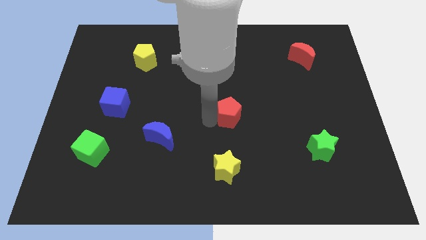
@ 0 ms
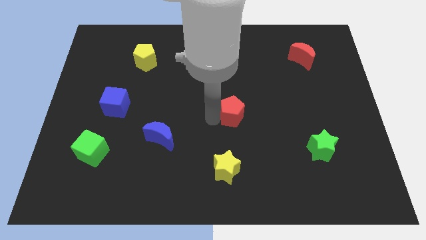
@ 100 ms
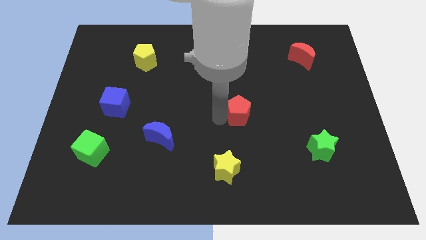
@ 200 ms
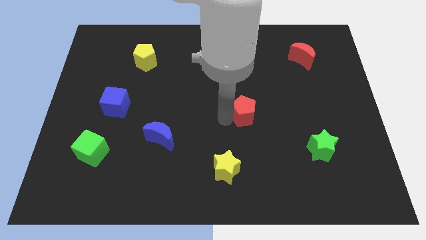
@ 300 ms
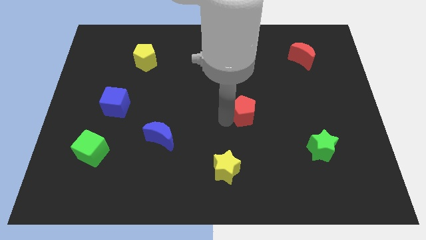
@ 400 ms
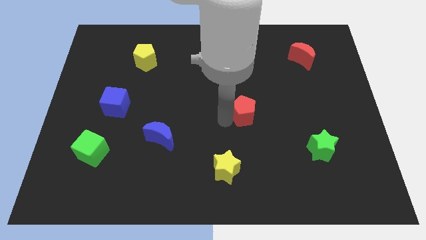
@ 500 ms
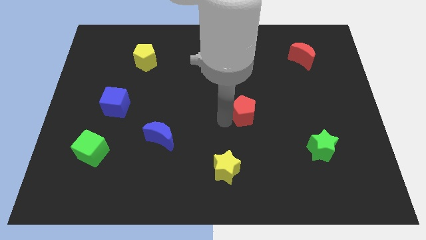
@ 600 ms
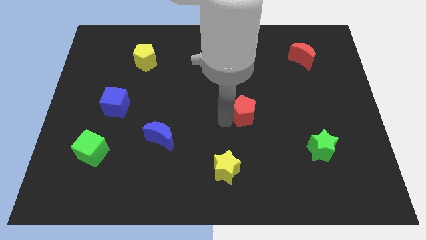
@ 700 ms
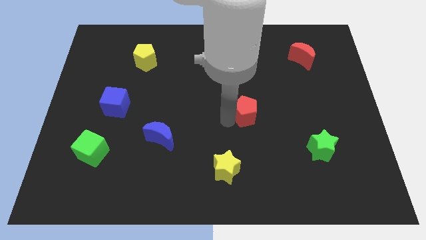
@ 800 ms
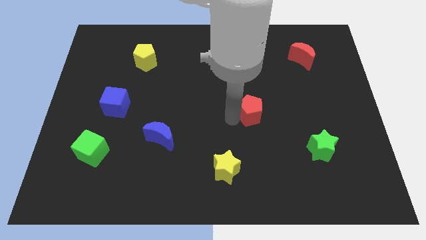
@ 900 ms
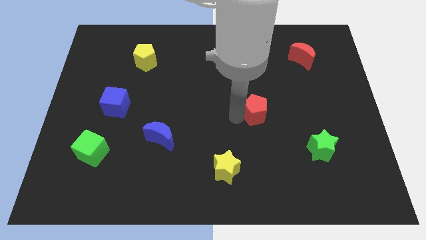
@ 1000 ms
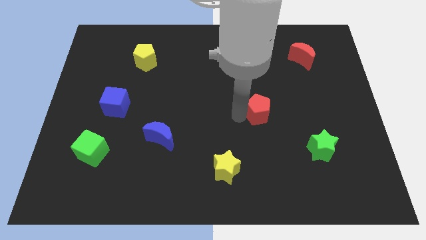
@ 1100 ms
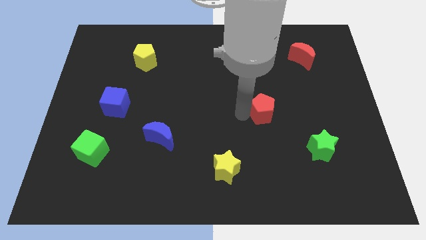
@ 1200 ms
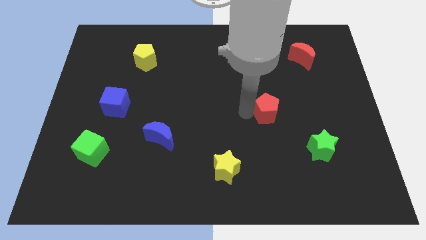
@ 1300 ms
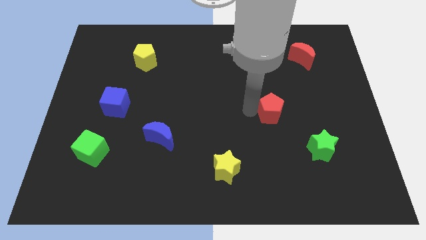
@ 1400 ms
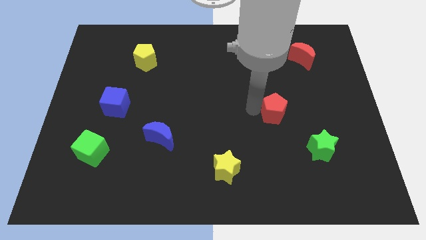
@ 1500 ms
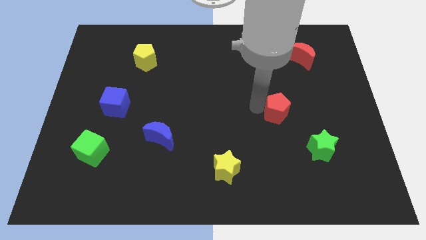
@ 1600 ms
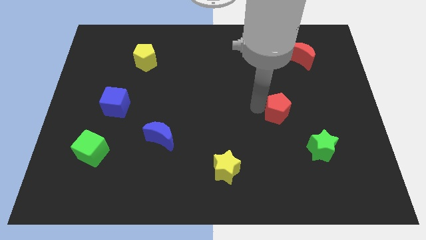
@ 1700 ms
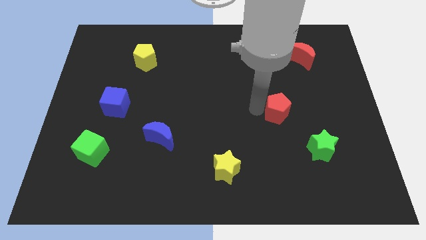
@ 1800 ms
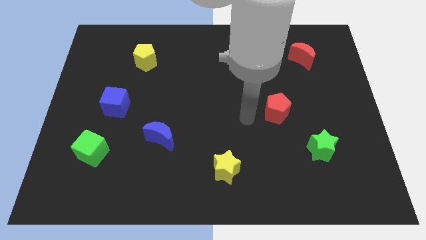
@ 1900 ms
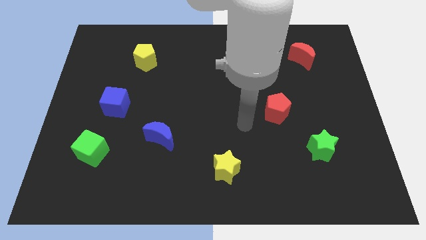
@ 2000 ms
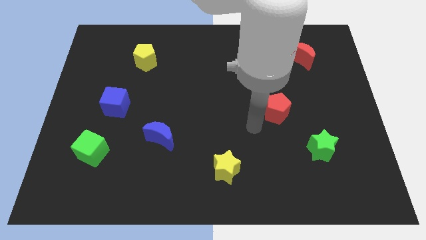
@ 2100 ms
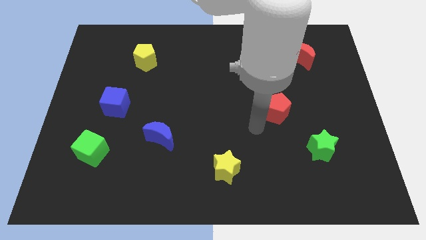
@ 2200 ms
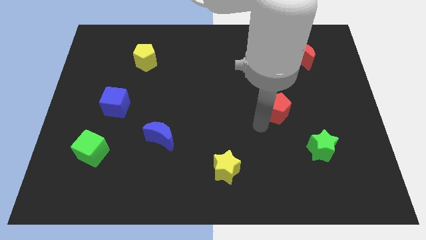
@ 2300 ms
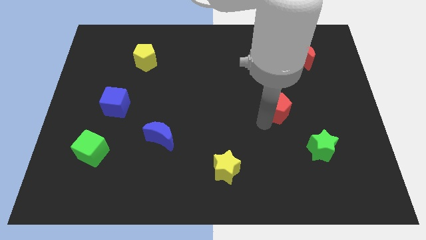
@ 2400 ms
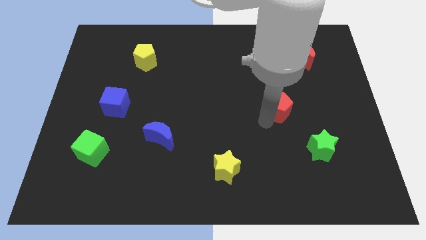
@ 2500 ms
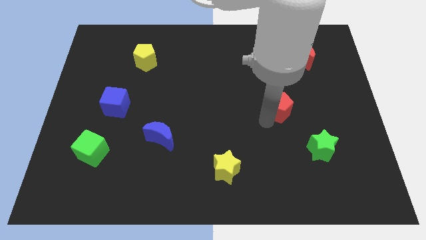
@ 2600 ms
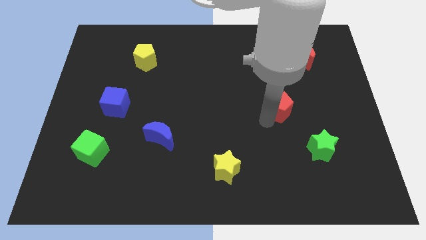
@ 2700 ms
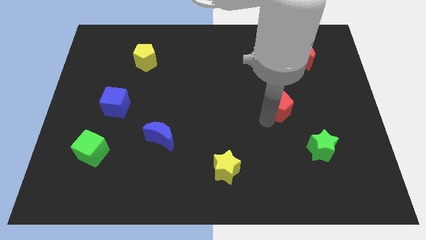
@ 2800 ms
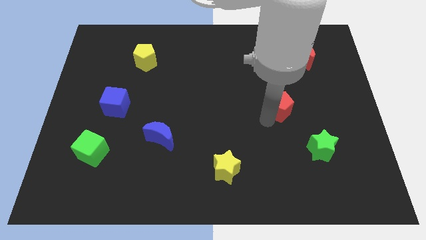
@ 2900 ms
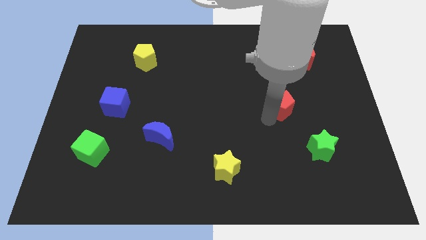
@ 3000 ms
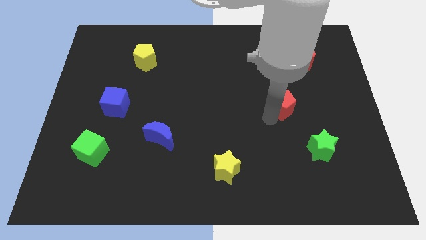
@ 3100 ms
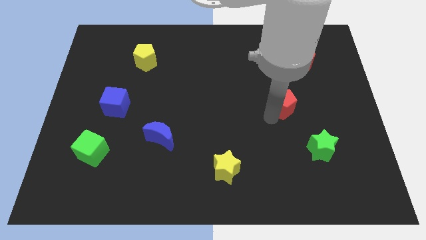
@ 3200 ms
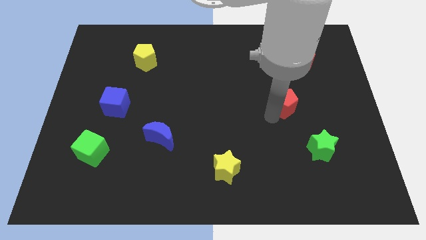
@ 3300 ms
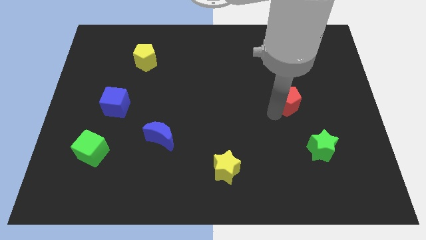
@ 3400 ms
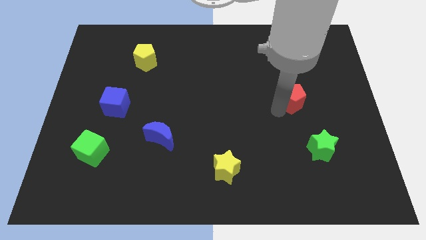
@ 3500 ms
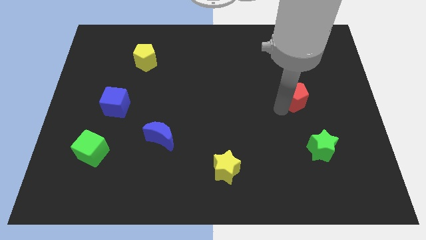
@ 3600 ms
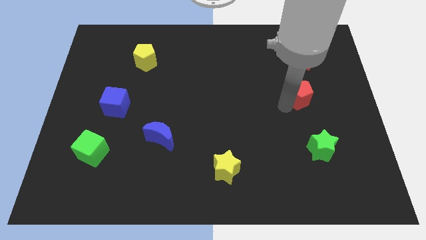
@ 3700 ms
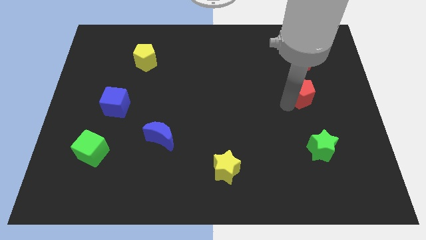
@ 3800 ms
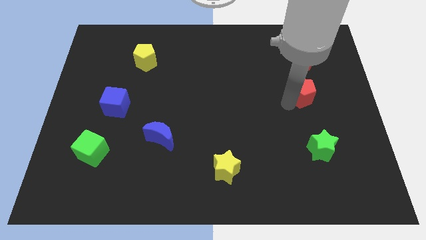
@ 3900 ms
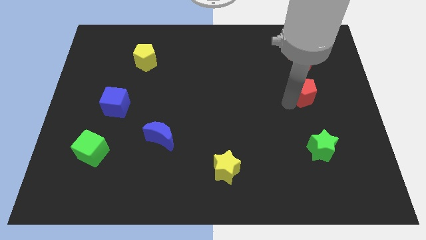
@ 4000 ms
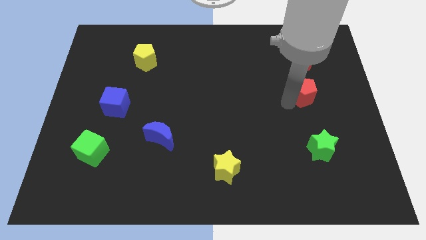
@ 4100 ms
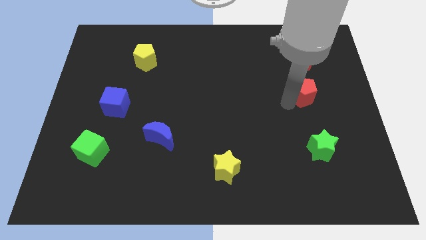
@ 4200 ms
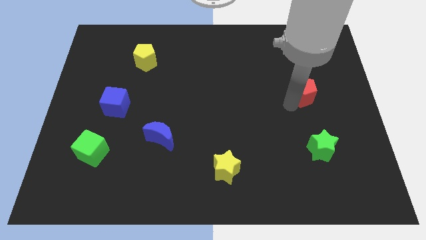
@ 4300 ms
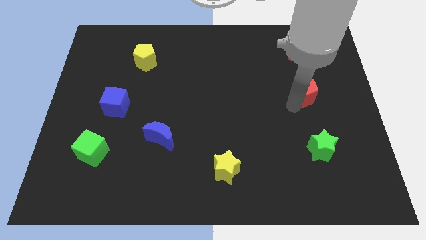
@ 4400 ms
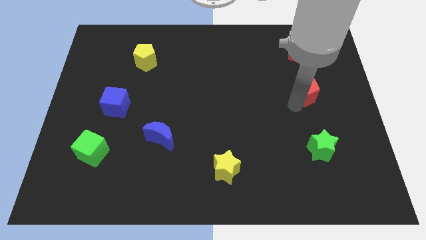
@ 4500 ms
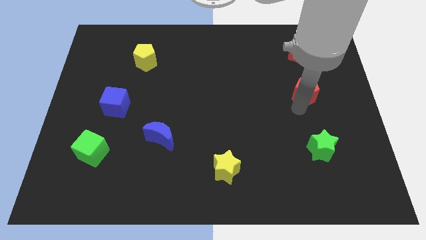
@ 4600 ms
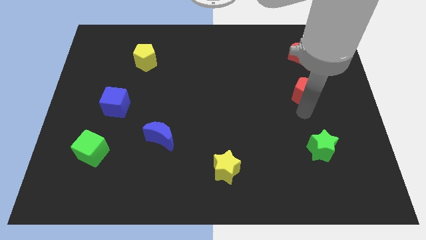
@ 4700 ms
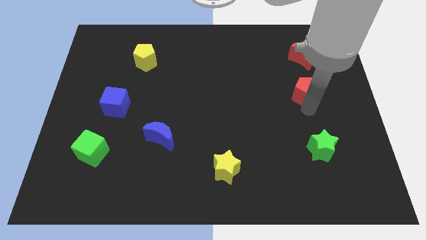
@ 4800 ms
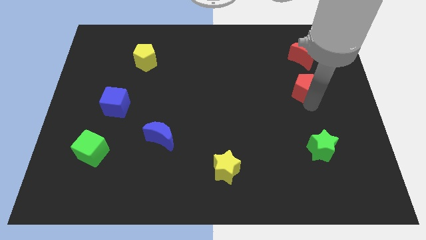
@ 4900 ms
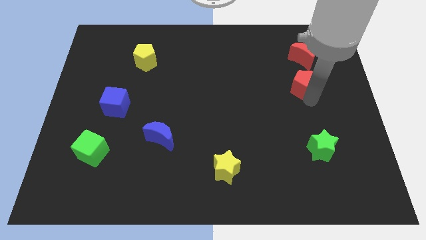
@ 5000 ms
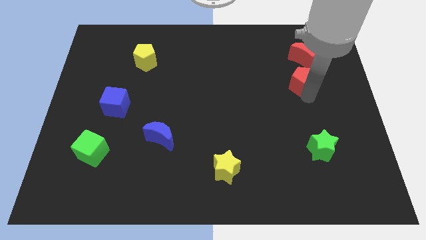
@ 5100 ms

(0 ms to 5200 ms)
push red pentagon towards red moon

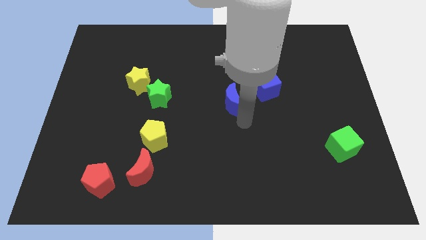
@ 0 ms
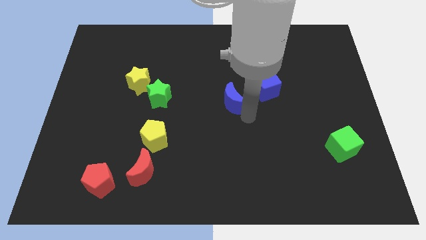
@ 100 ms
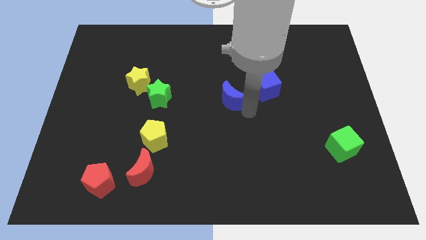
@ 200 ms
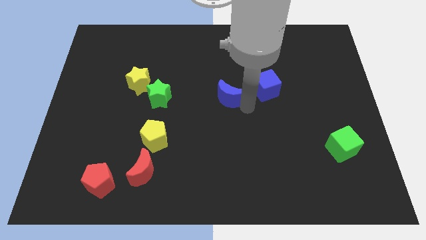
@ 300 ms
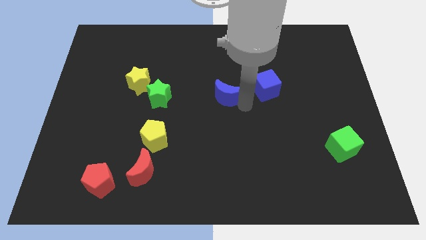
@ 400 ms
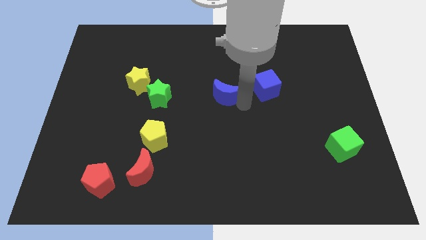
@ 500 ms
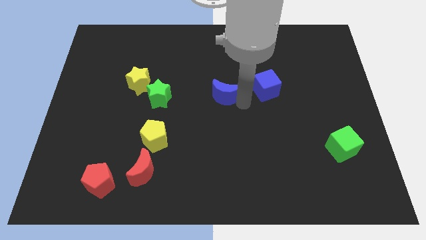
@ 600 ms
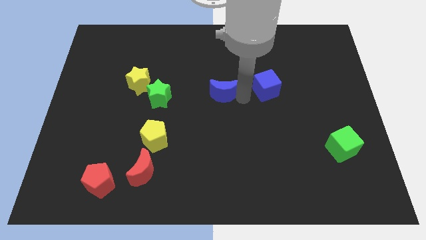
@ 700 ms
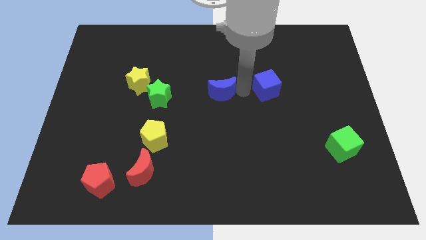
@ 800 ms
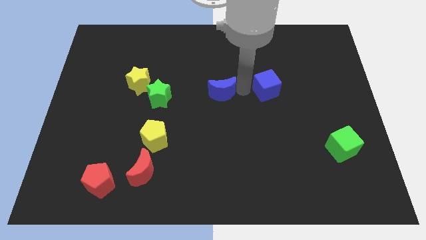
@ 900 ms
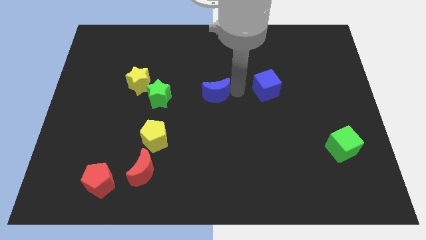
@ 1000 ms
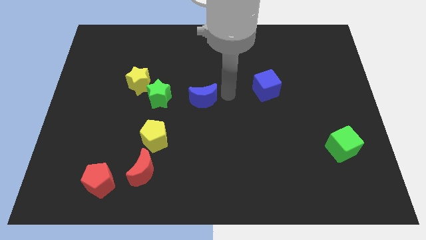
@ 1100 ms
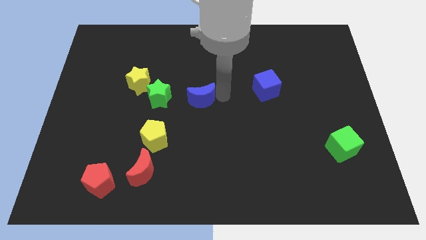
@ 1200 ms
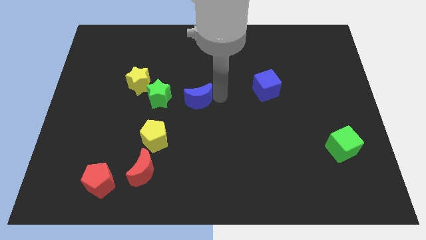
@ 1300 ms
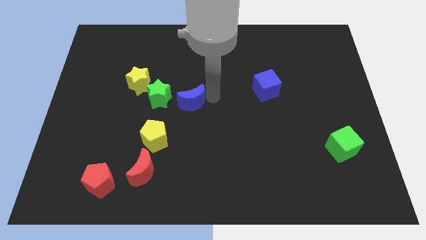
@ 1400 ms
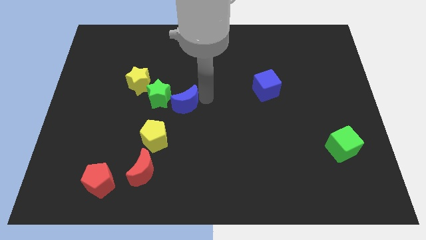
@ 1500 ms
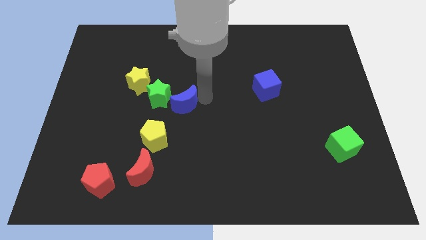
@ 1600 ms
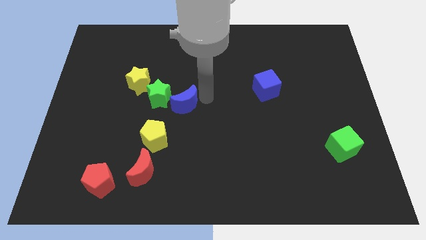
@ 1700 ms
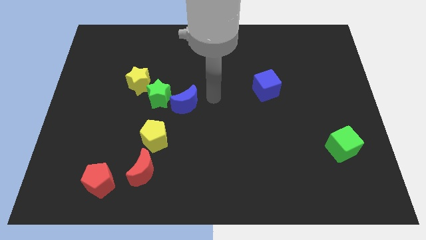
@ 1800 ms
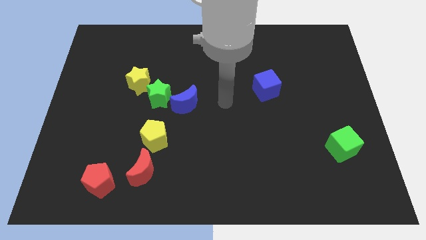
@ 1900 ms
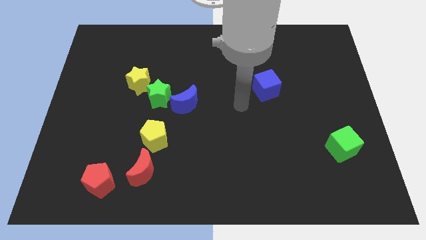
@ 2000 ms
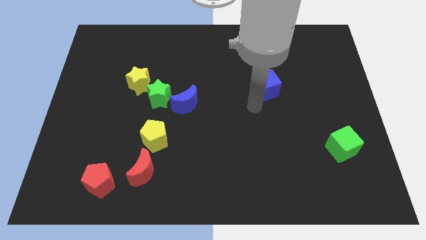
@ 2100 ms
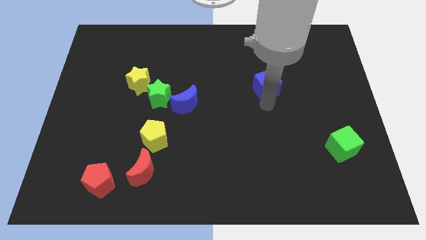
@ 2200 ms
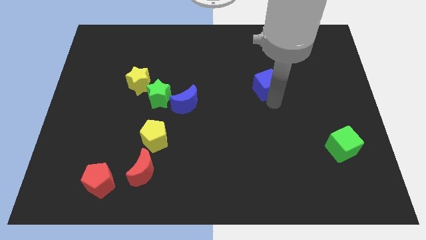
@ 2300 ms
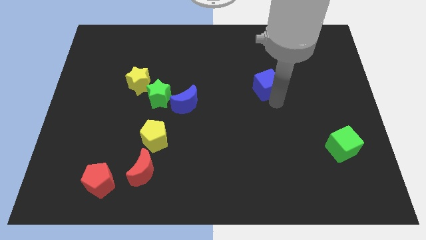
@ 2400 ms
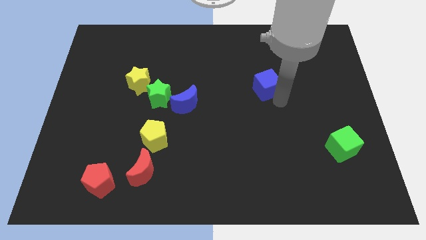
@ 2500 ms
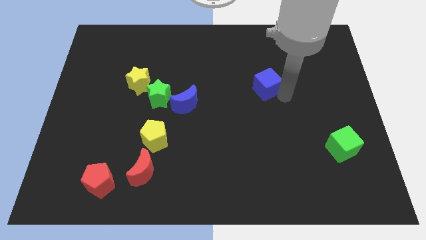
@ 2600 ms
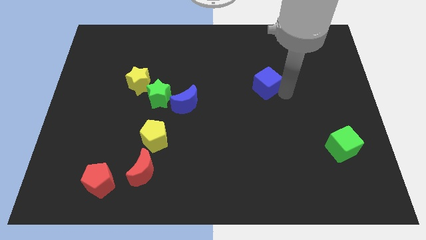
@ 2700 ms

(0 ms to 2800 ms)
push the blue crescent below the green star

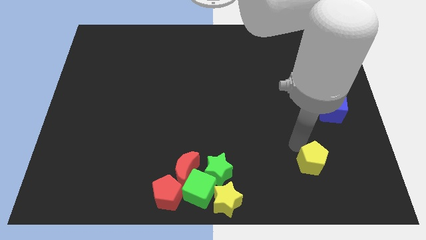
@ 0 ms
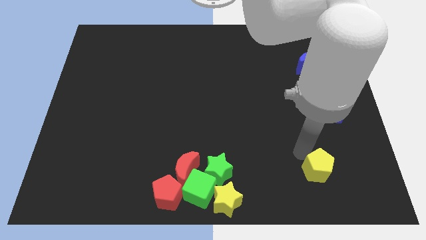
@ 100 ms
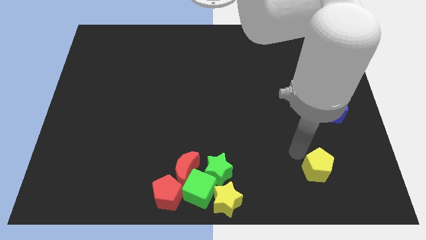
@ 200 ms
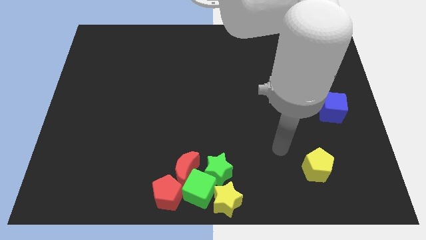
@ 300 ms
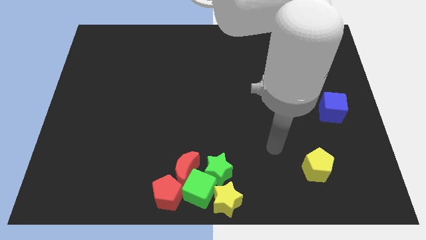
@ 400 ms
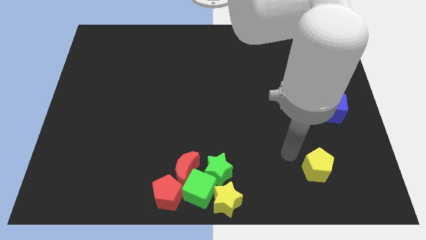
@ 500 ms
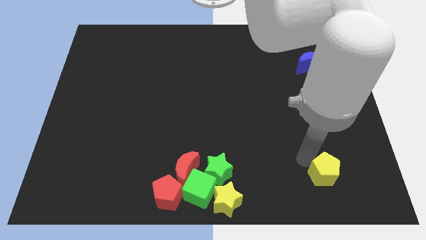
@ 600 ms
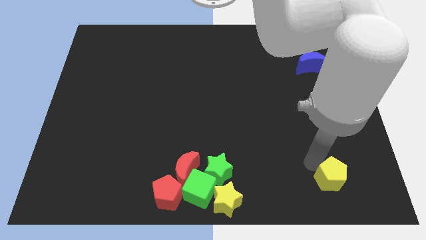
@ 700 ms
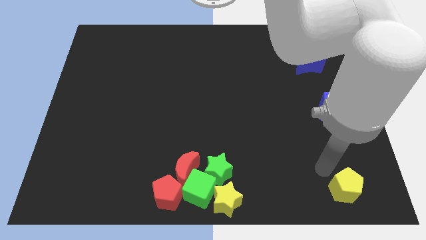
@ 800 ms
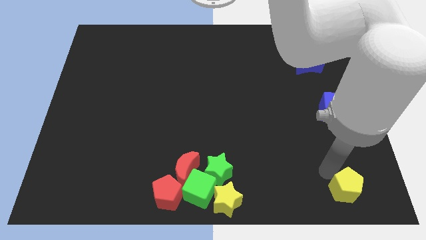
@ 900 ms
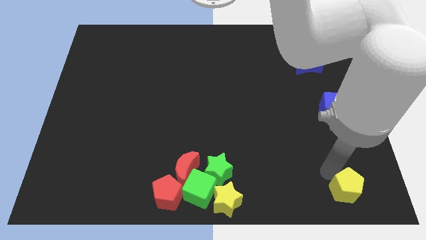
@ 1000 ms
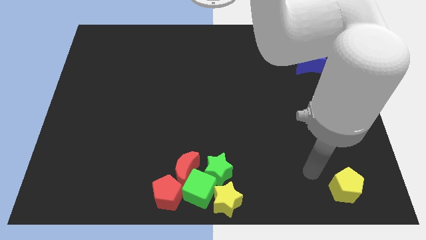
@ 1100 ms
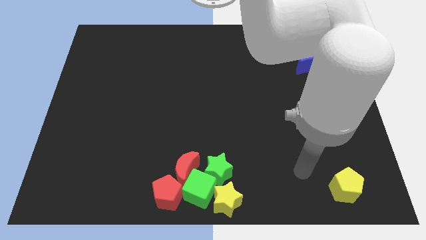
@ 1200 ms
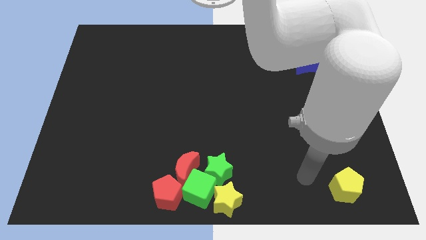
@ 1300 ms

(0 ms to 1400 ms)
slide the yellow pentagon to the bottom right side of the board
